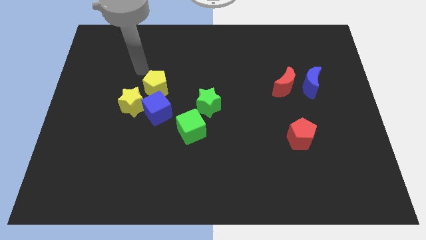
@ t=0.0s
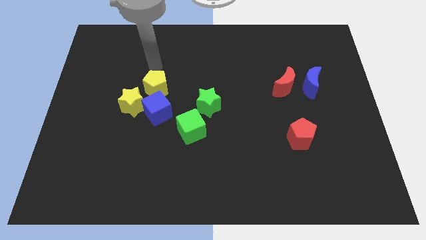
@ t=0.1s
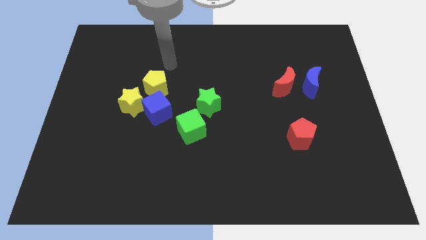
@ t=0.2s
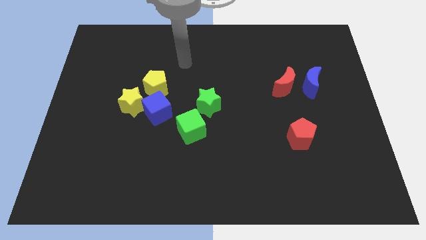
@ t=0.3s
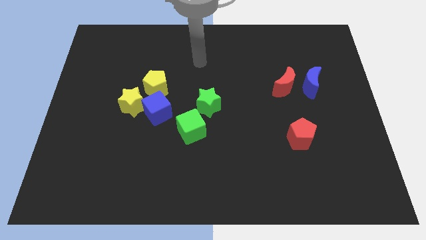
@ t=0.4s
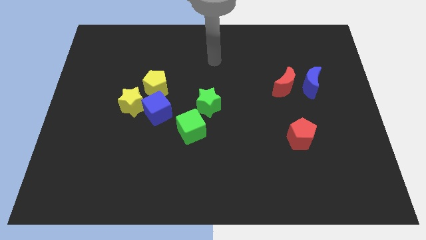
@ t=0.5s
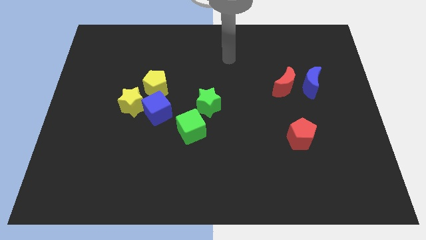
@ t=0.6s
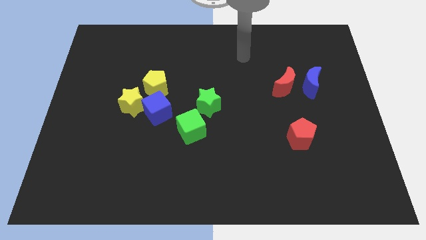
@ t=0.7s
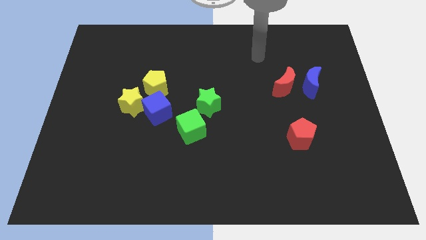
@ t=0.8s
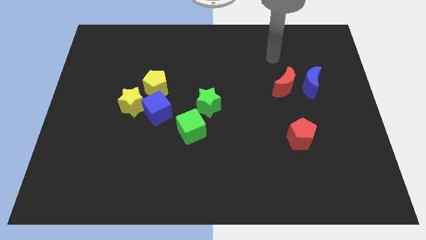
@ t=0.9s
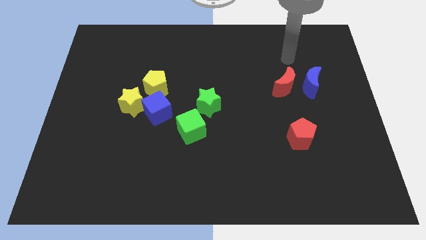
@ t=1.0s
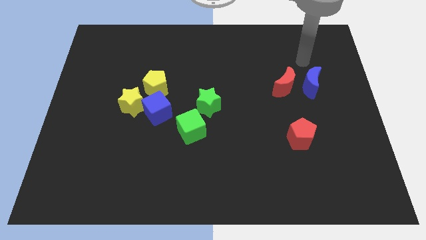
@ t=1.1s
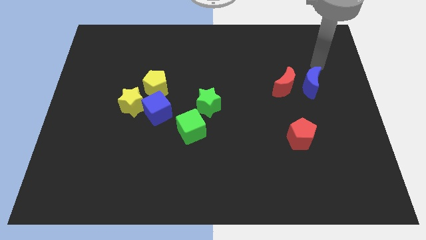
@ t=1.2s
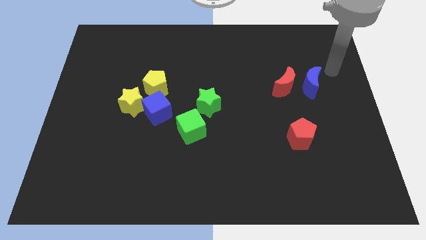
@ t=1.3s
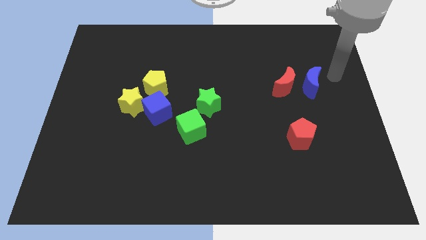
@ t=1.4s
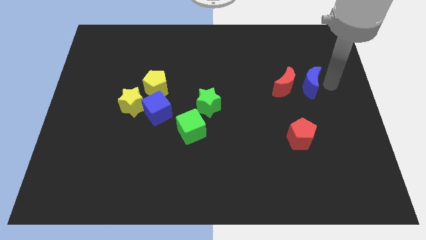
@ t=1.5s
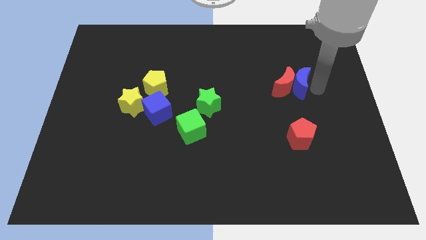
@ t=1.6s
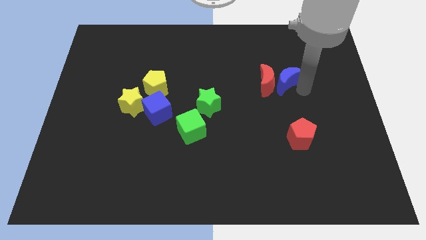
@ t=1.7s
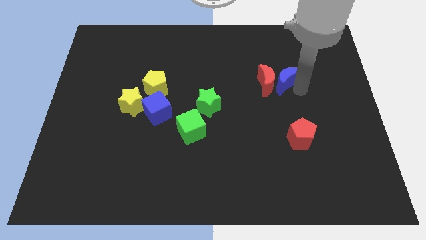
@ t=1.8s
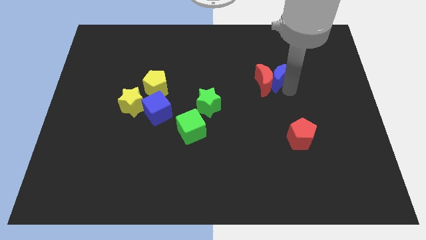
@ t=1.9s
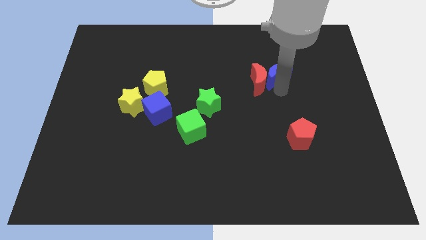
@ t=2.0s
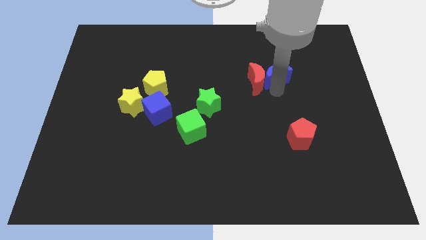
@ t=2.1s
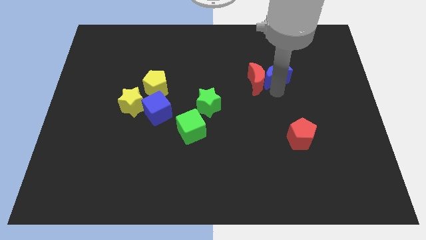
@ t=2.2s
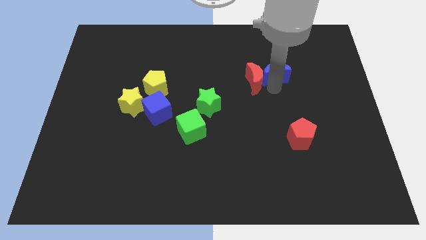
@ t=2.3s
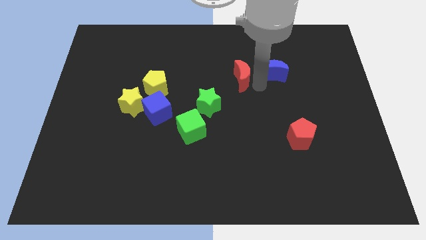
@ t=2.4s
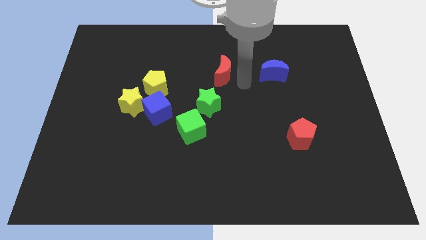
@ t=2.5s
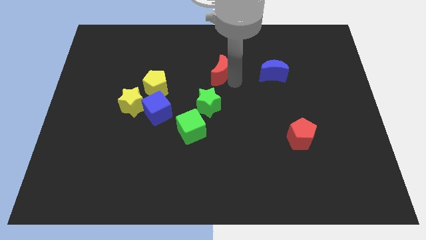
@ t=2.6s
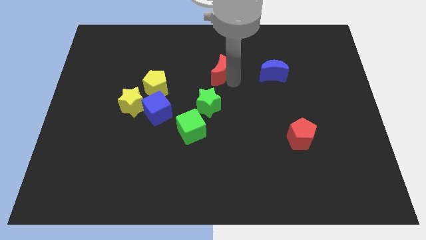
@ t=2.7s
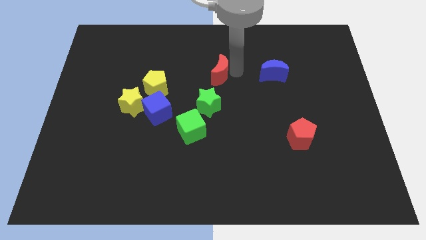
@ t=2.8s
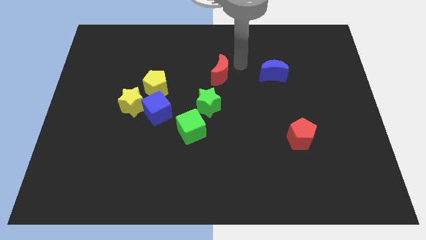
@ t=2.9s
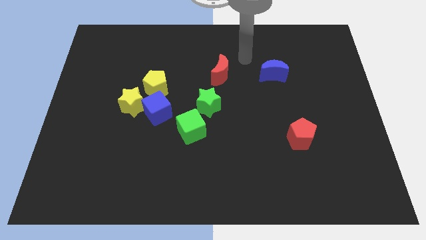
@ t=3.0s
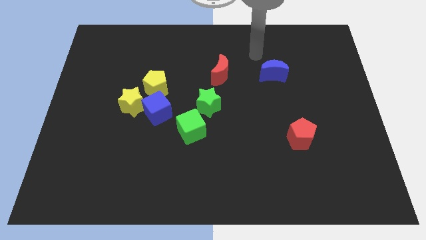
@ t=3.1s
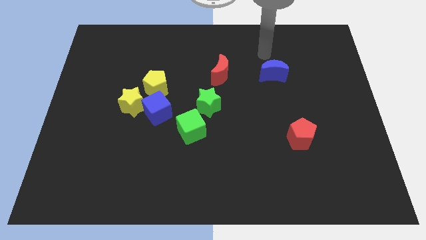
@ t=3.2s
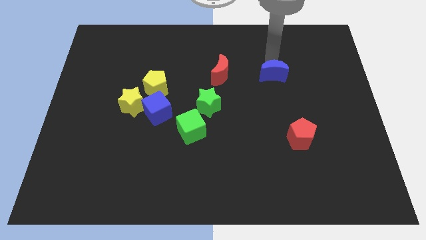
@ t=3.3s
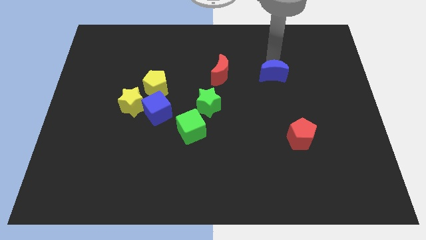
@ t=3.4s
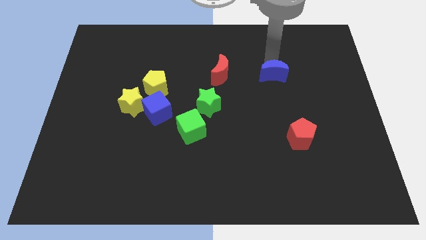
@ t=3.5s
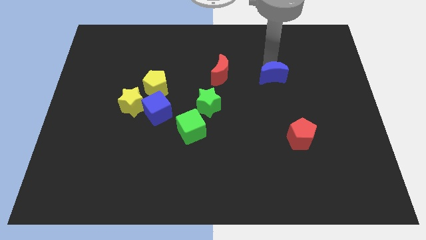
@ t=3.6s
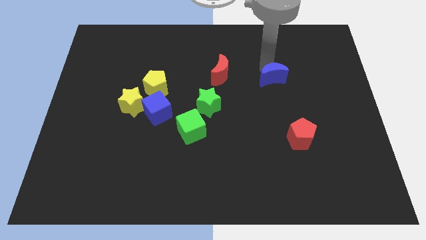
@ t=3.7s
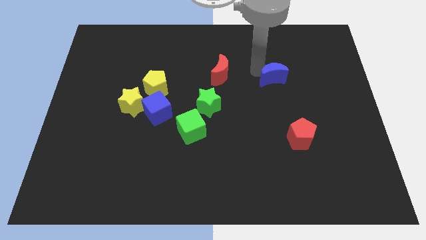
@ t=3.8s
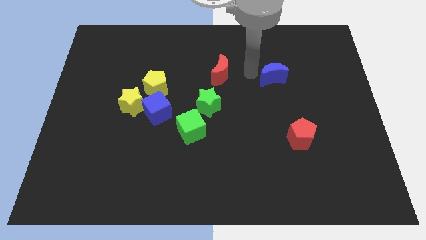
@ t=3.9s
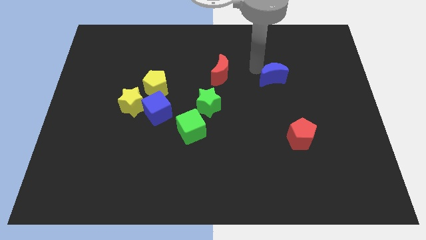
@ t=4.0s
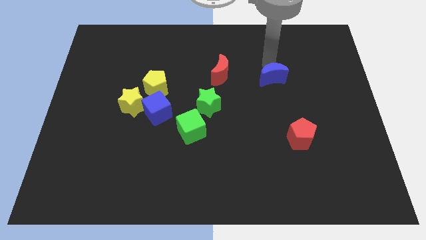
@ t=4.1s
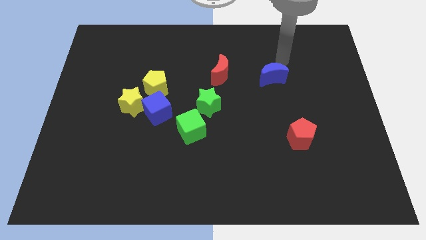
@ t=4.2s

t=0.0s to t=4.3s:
push the blue crescent and red crescent towards left

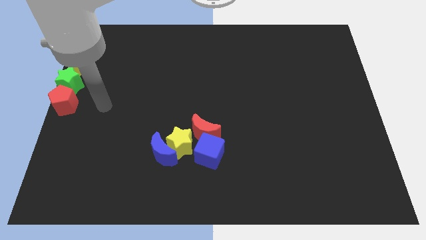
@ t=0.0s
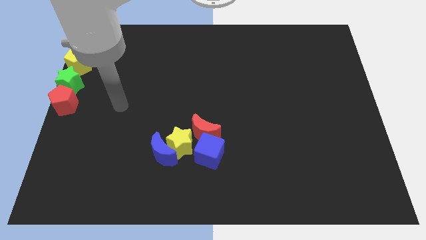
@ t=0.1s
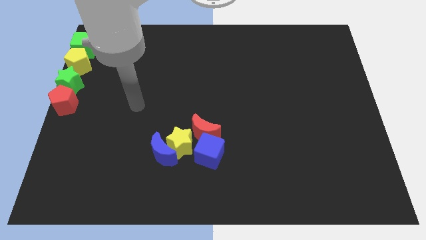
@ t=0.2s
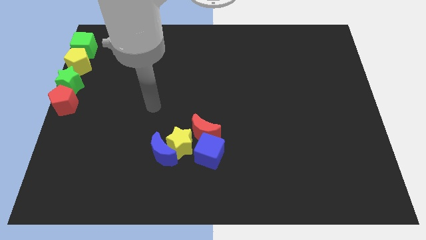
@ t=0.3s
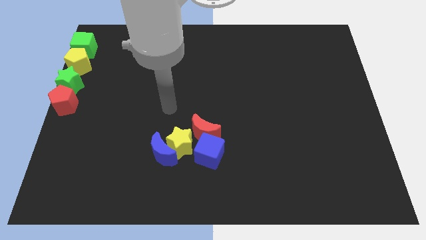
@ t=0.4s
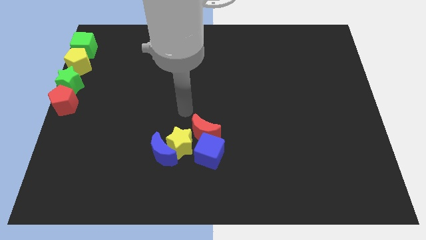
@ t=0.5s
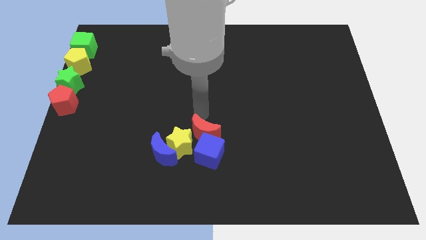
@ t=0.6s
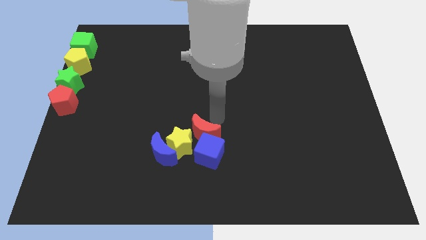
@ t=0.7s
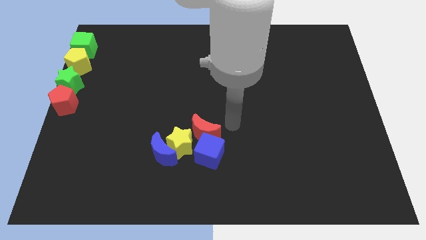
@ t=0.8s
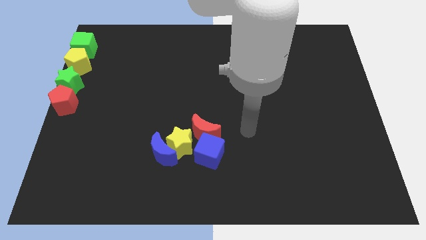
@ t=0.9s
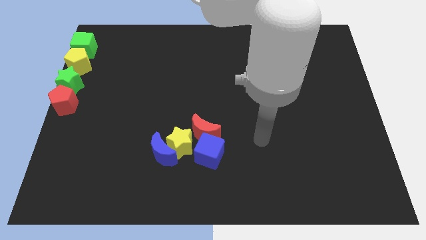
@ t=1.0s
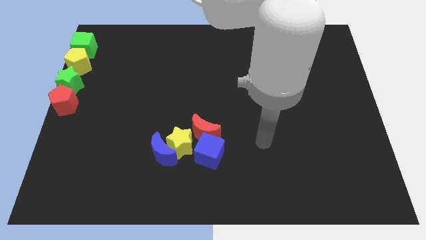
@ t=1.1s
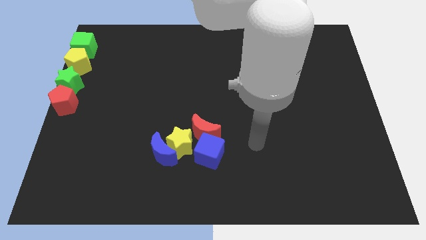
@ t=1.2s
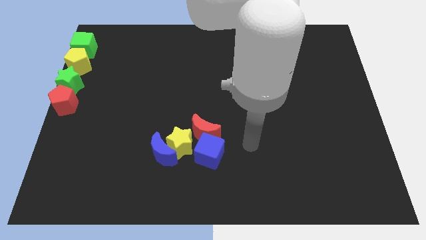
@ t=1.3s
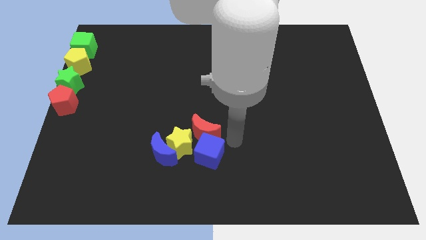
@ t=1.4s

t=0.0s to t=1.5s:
point your arm at the right side of the red moon

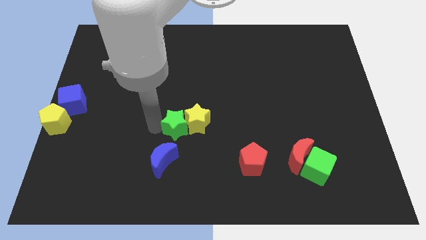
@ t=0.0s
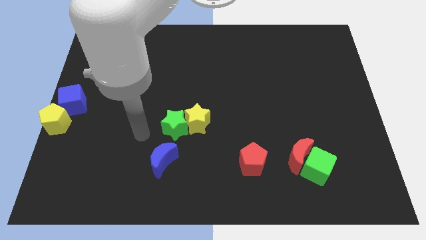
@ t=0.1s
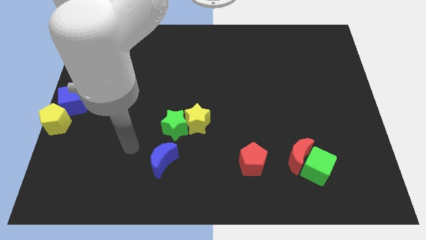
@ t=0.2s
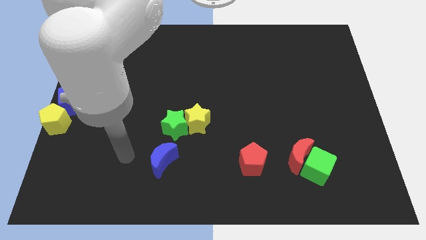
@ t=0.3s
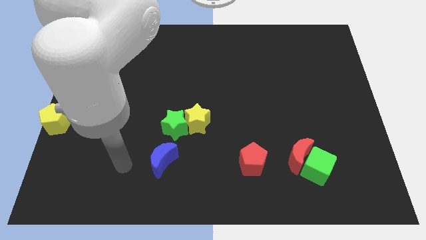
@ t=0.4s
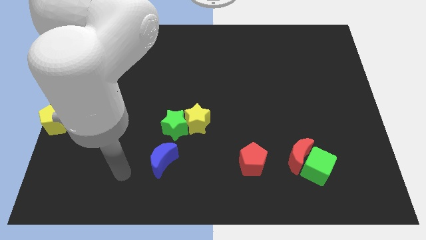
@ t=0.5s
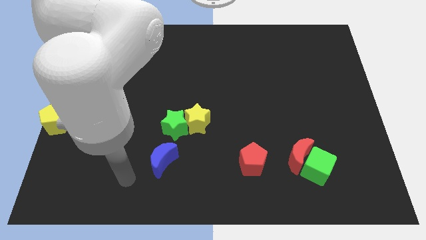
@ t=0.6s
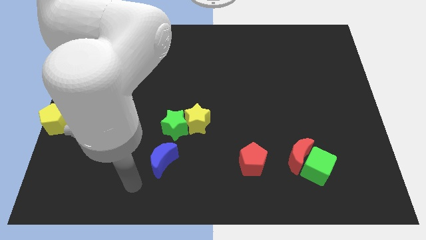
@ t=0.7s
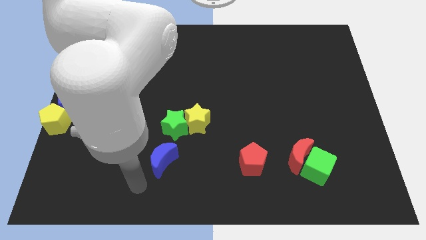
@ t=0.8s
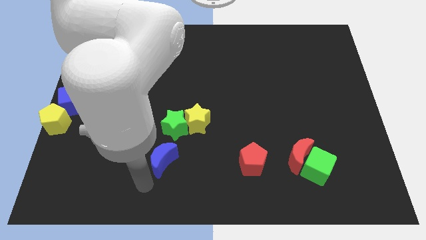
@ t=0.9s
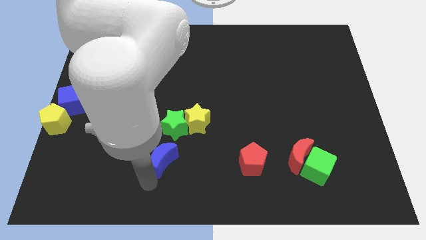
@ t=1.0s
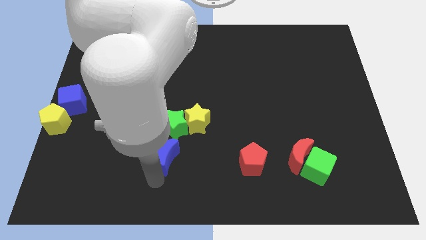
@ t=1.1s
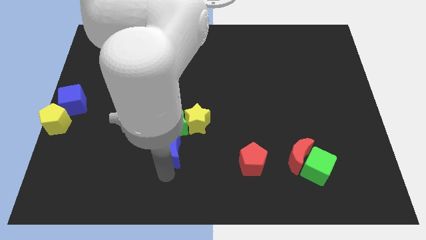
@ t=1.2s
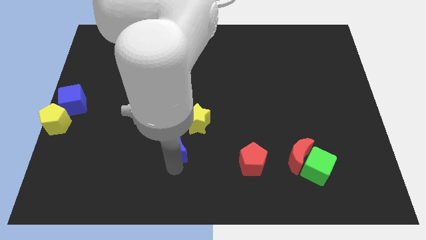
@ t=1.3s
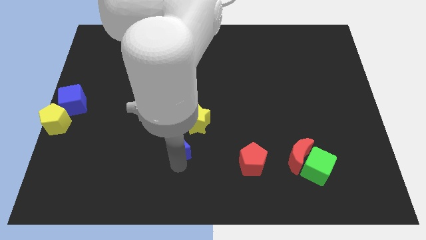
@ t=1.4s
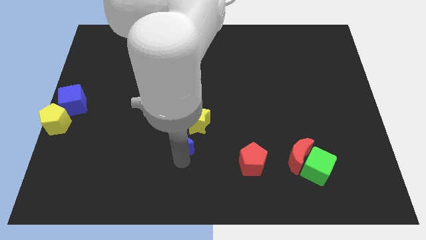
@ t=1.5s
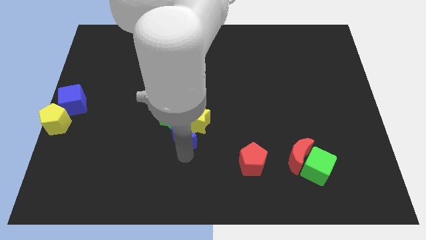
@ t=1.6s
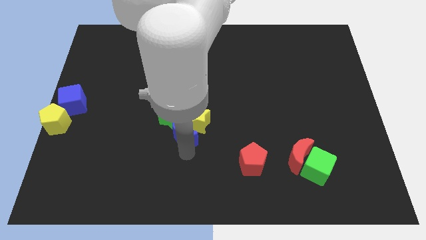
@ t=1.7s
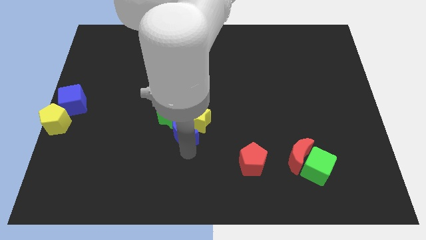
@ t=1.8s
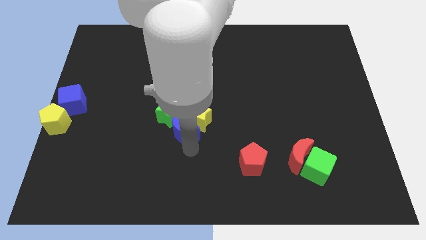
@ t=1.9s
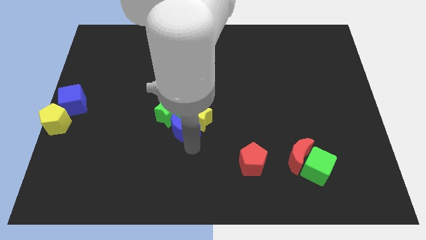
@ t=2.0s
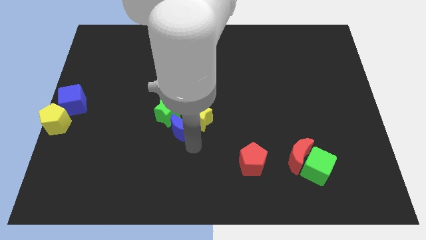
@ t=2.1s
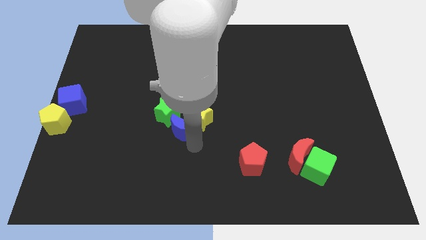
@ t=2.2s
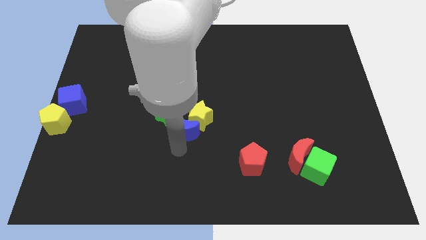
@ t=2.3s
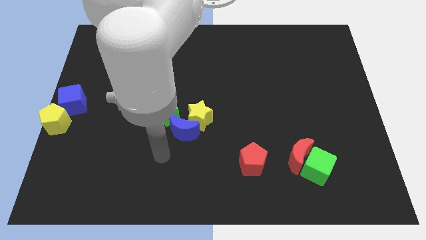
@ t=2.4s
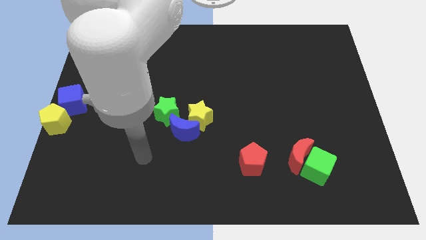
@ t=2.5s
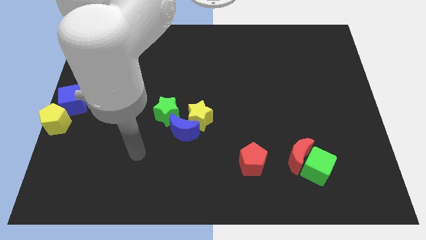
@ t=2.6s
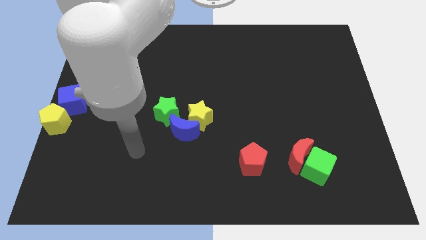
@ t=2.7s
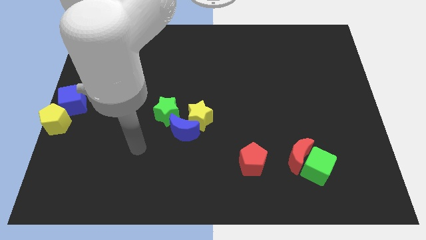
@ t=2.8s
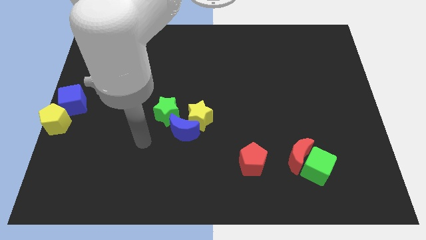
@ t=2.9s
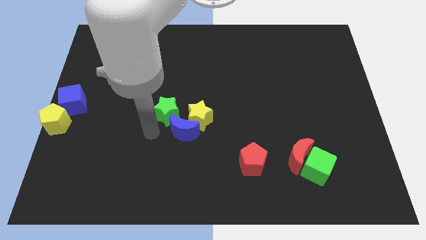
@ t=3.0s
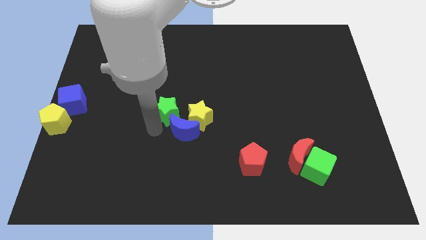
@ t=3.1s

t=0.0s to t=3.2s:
move the blue crescent into the green and yellow stars
